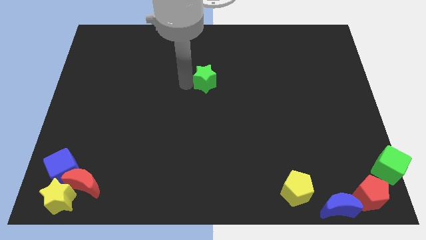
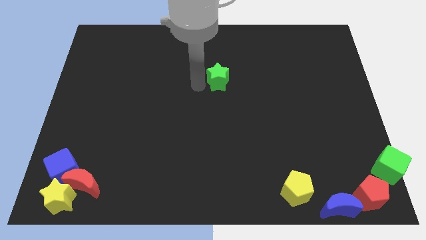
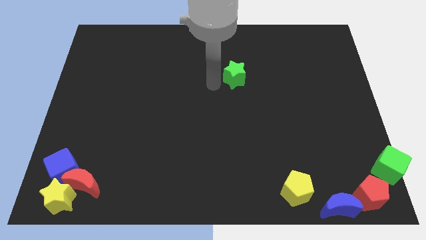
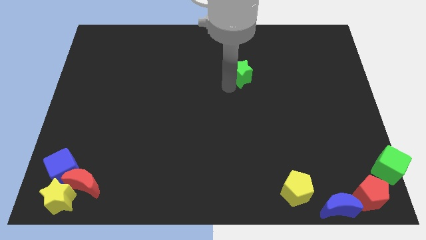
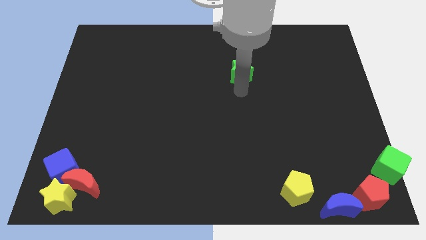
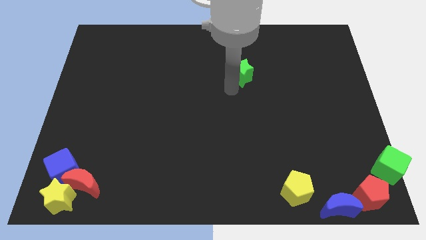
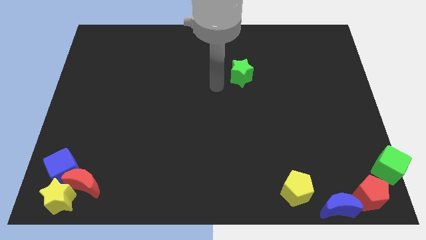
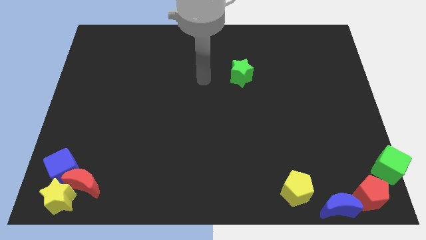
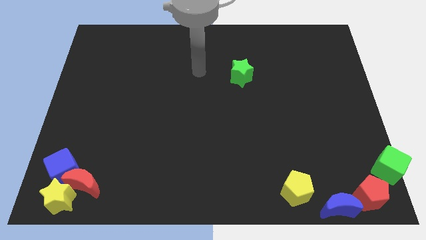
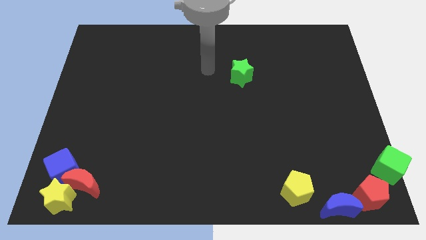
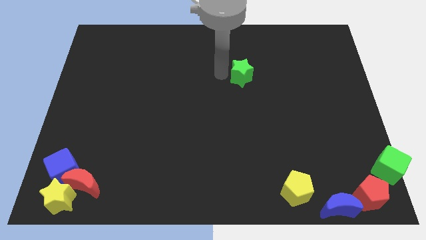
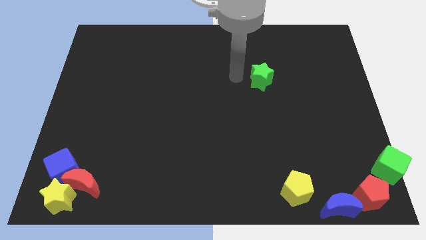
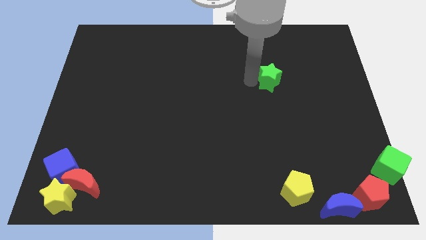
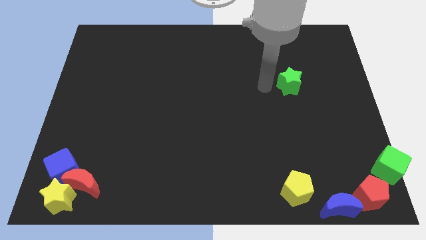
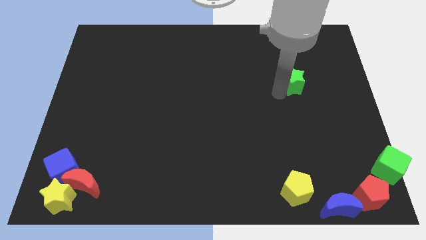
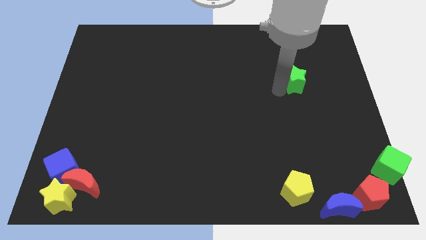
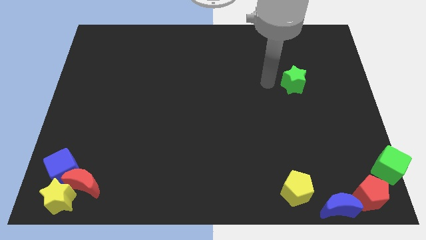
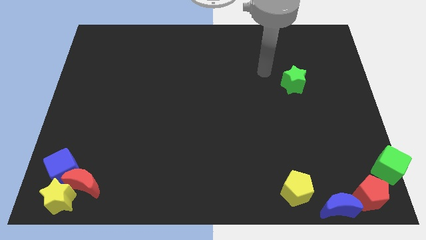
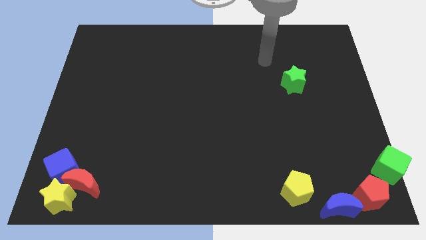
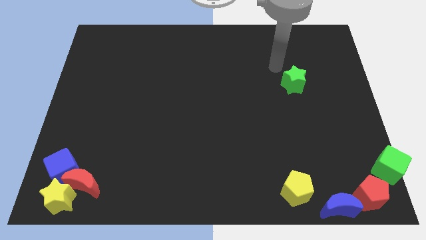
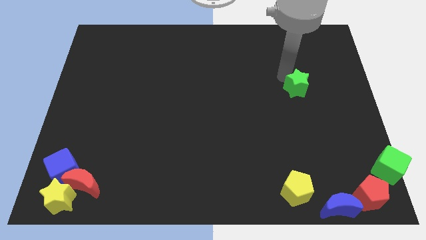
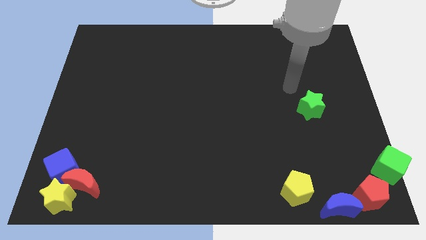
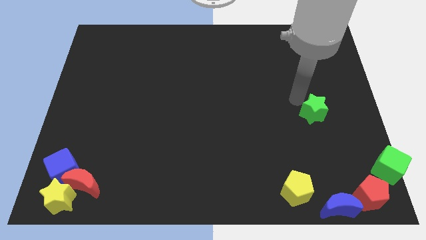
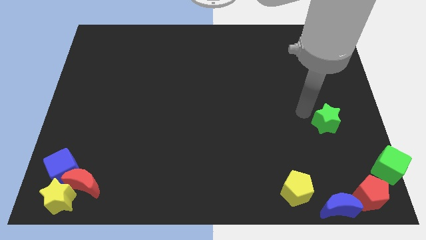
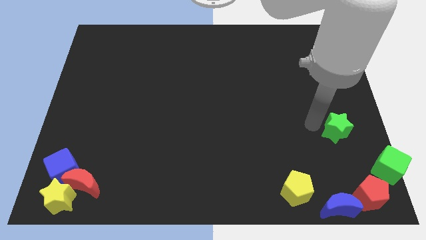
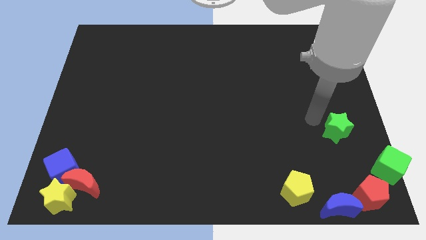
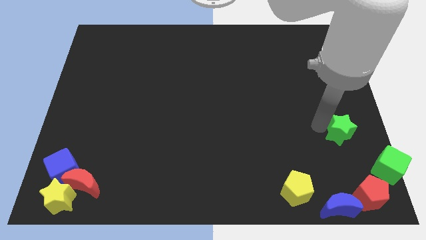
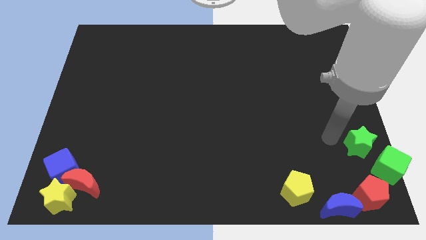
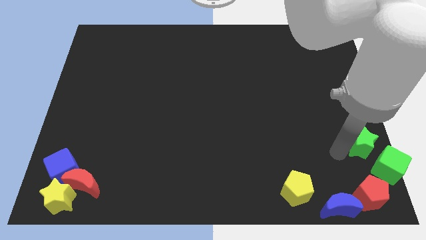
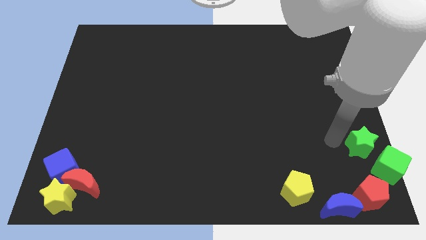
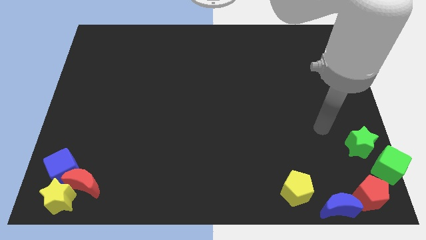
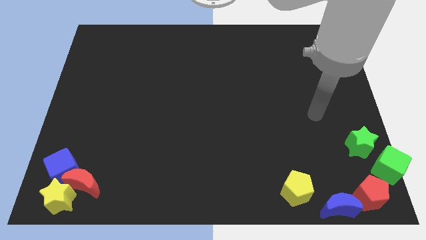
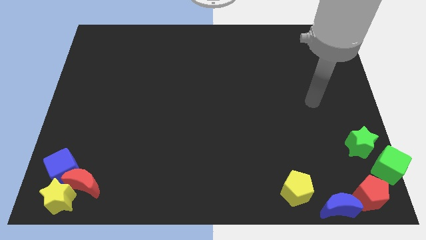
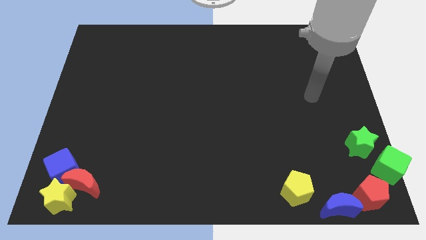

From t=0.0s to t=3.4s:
drag the green star to the top side of the red pentagon

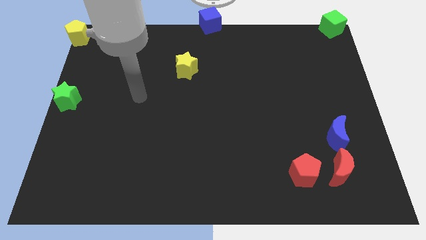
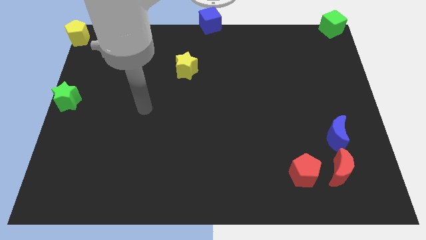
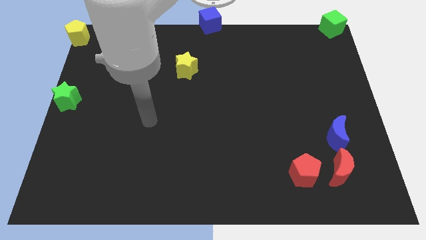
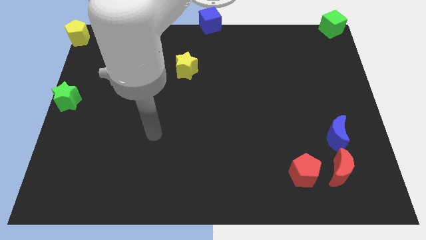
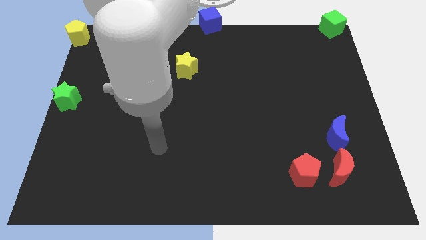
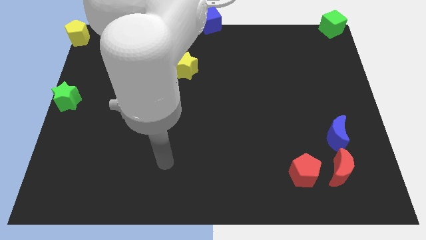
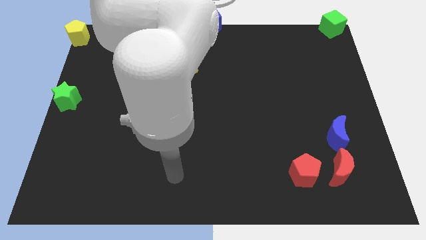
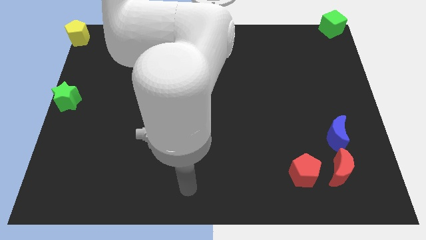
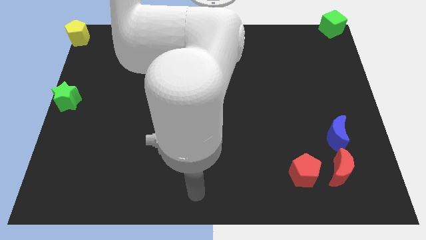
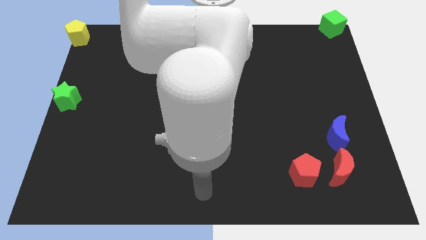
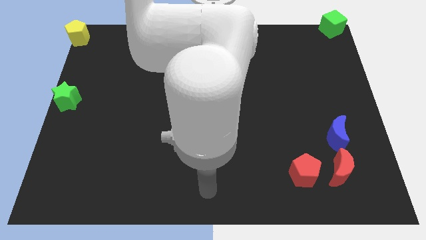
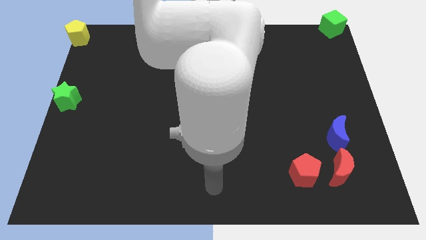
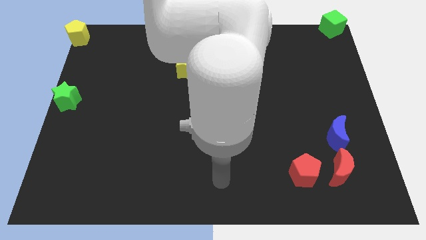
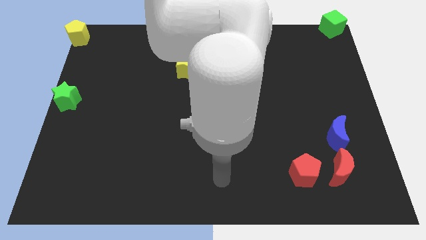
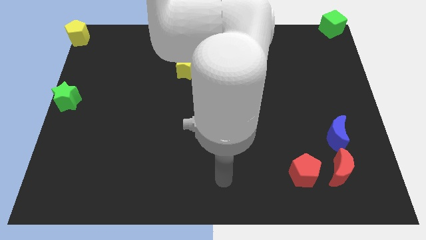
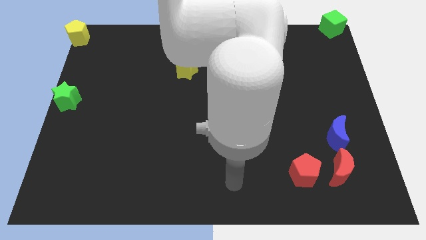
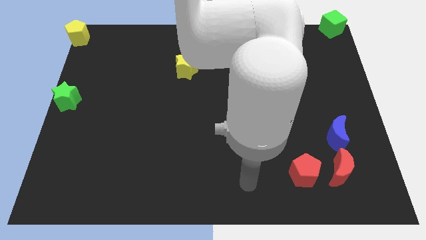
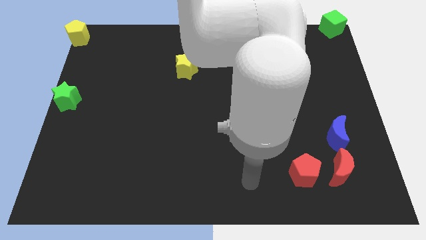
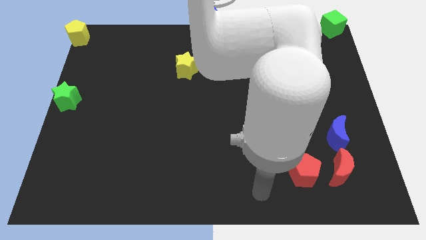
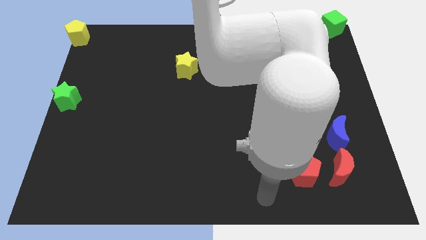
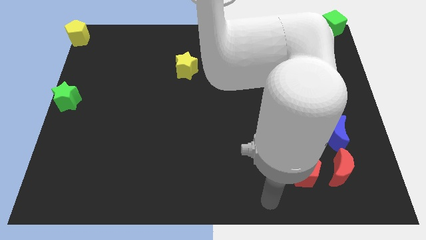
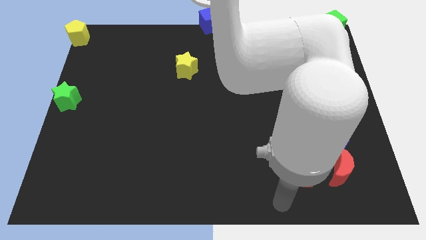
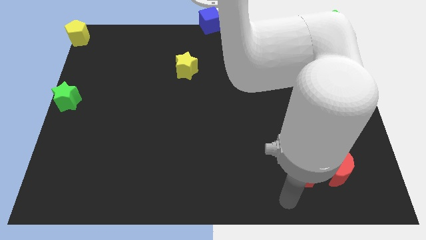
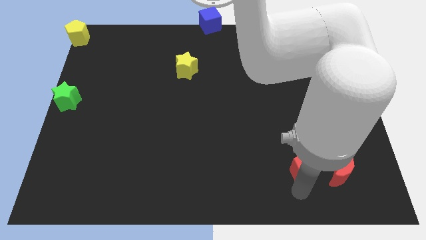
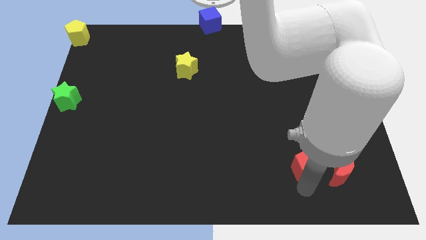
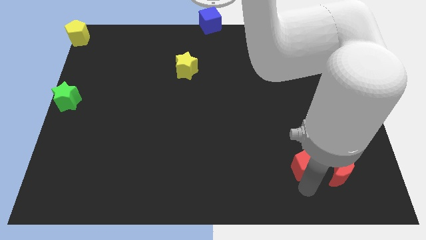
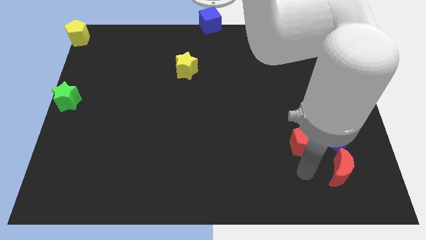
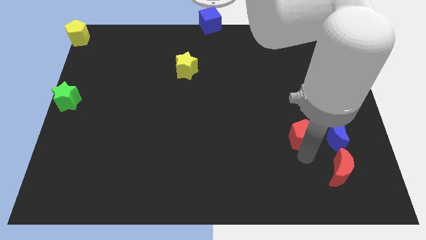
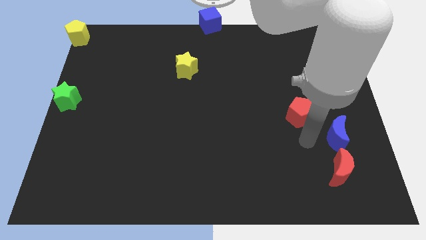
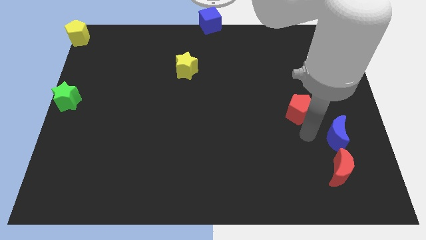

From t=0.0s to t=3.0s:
push red pentagon slightly up

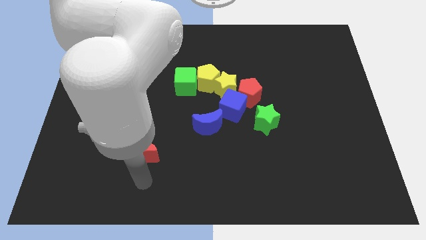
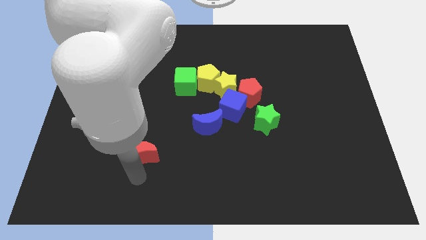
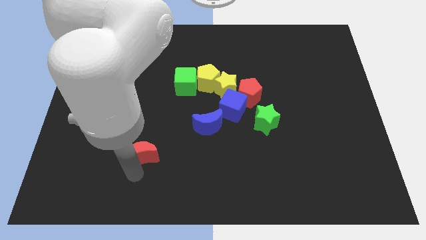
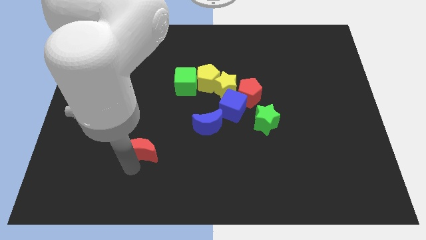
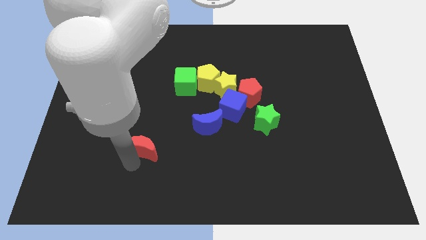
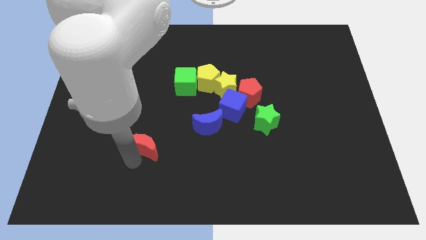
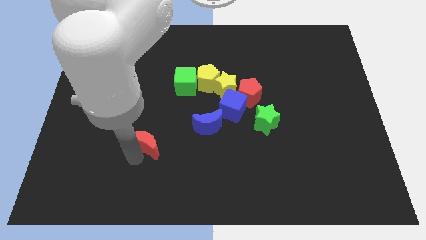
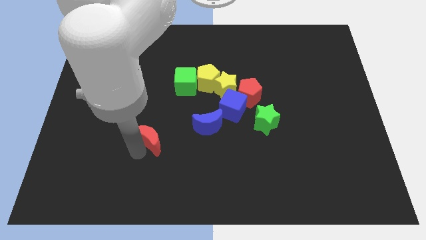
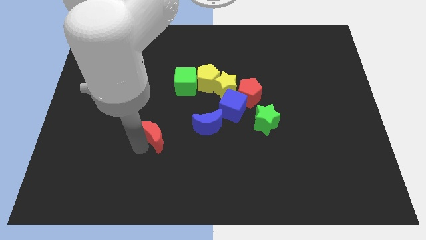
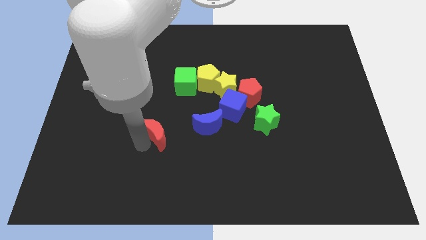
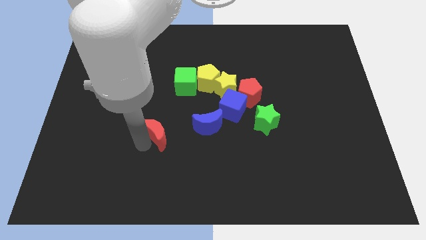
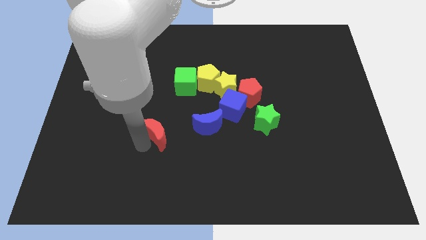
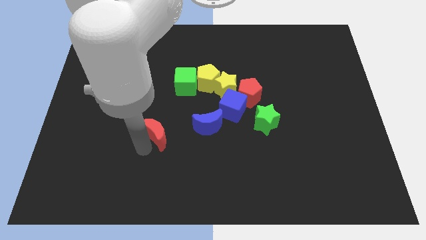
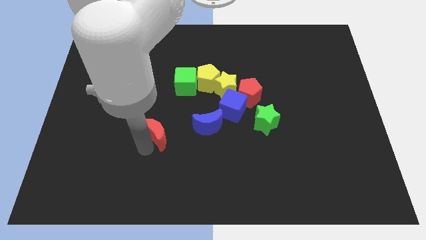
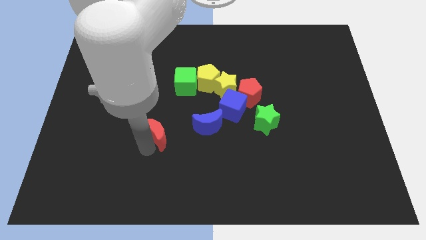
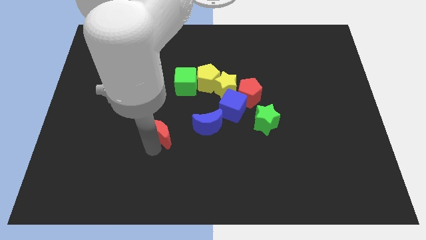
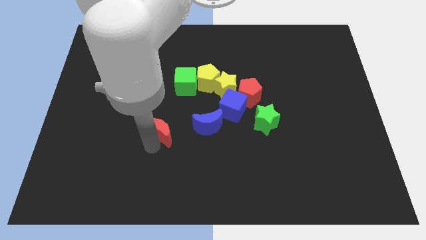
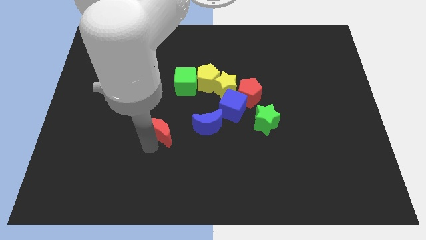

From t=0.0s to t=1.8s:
move the red moon diagonally to yellow star

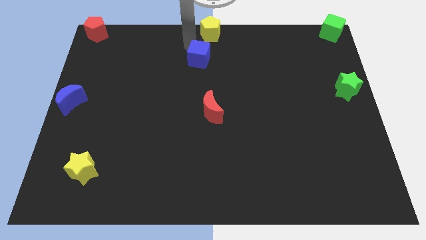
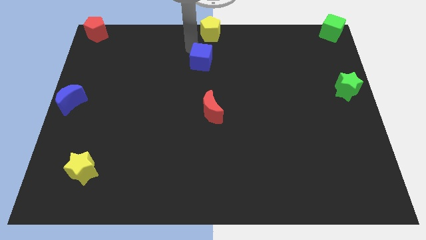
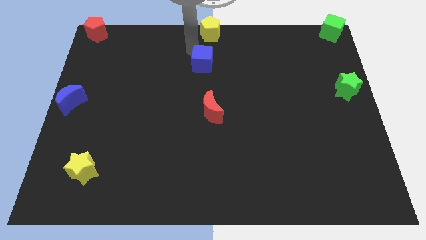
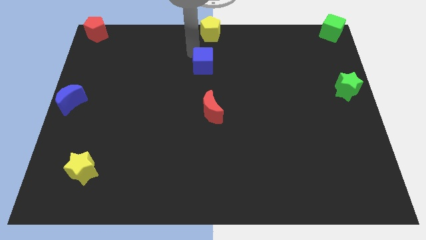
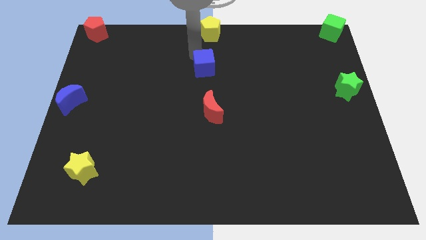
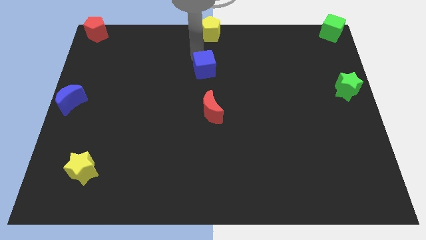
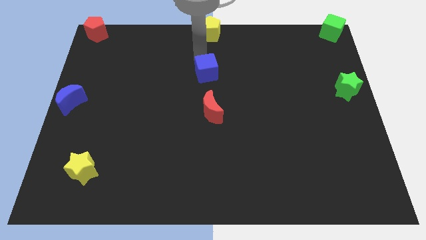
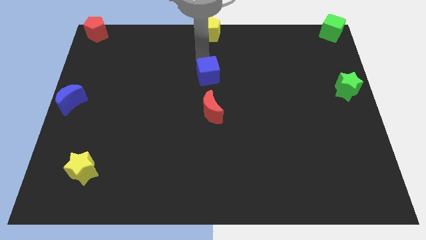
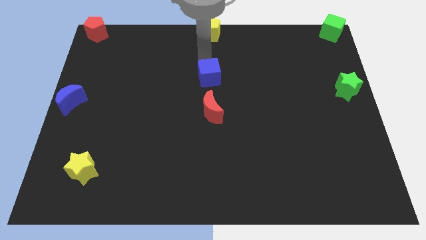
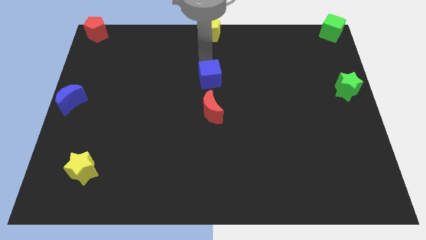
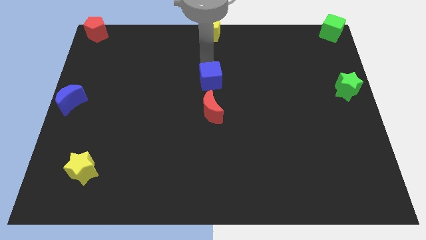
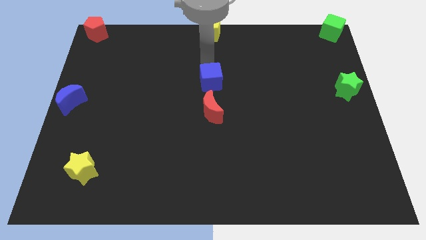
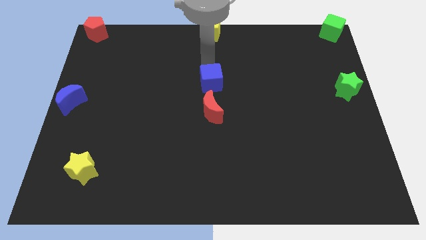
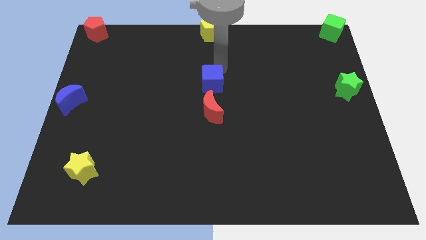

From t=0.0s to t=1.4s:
place the blue cube above the red moon
